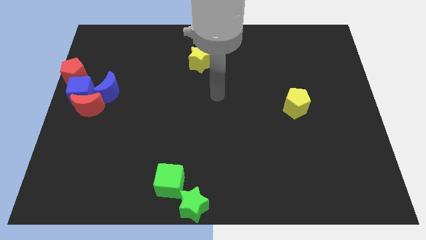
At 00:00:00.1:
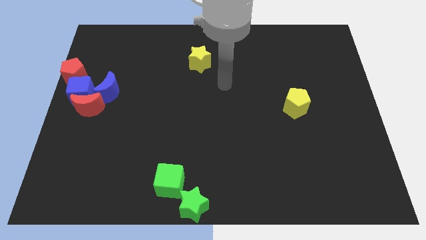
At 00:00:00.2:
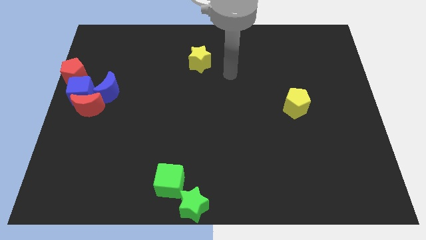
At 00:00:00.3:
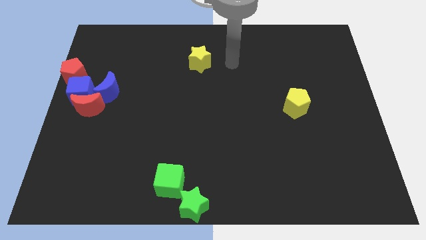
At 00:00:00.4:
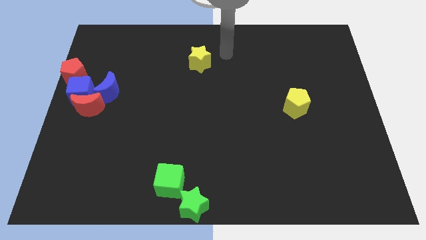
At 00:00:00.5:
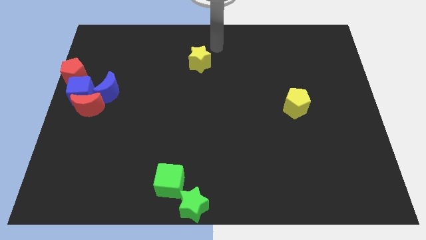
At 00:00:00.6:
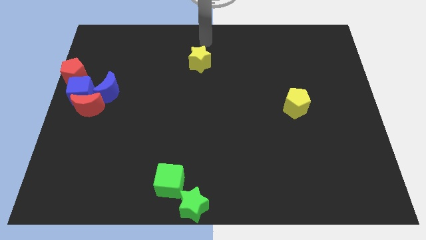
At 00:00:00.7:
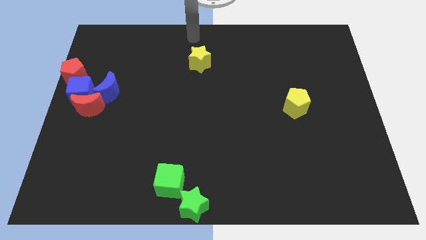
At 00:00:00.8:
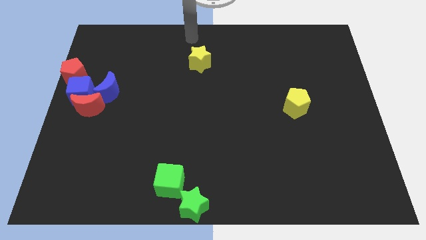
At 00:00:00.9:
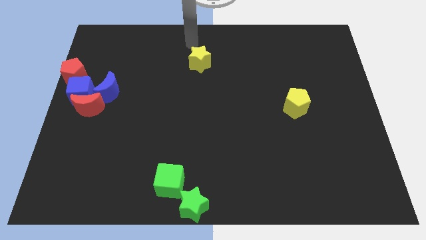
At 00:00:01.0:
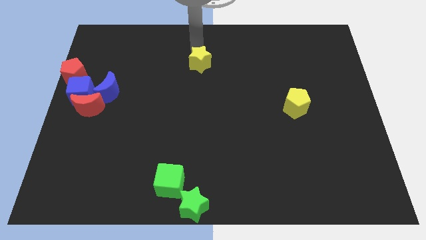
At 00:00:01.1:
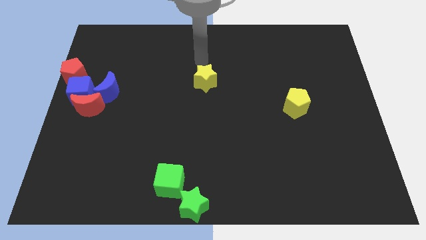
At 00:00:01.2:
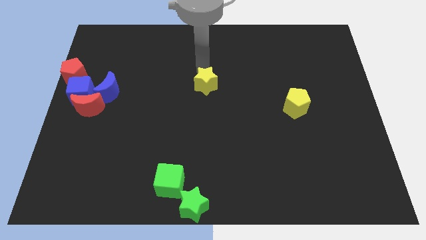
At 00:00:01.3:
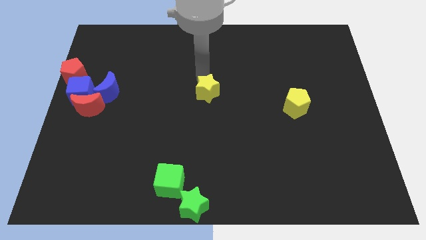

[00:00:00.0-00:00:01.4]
push the yellow pentagon to the center of the board

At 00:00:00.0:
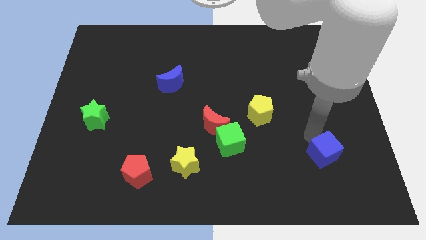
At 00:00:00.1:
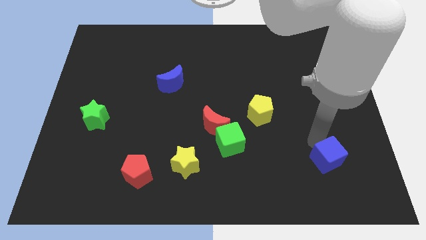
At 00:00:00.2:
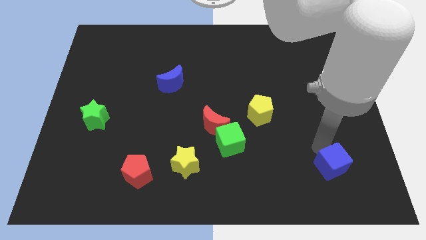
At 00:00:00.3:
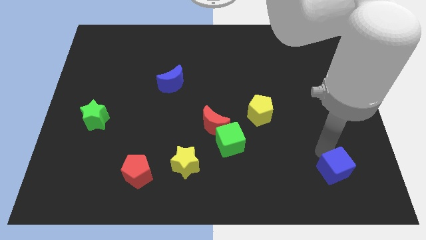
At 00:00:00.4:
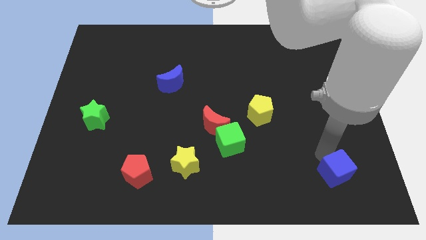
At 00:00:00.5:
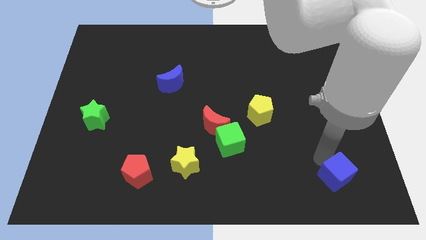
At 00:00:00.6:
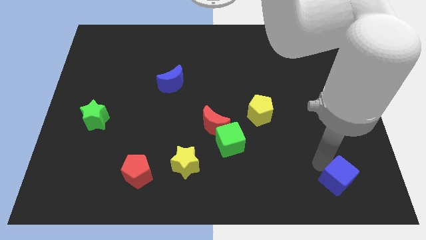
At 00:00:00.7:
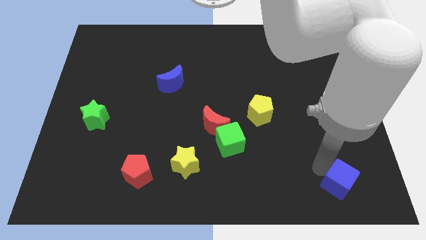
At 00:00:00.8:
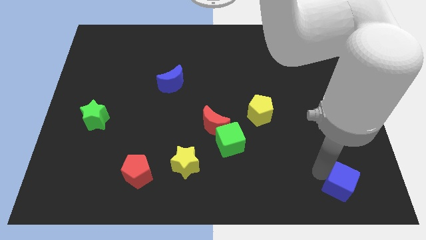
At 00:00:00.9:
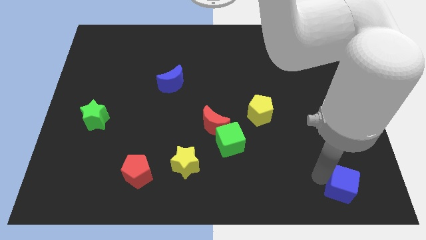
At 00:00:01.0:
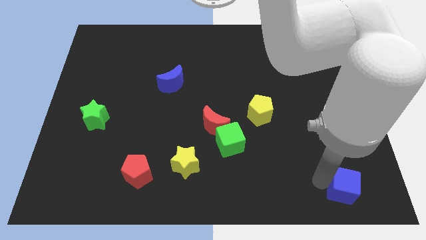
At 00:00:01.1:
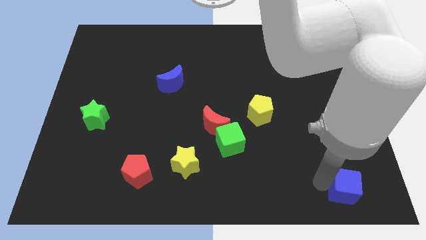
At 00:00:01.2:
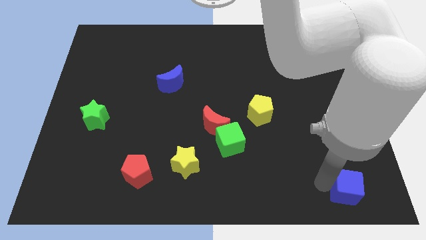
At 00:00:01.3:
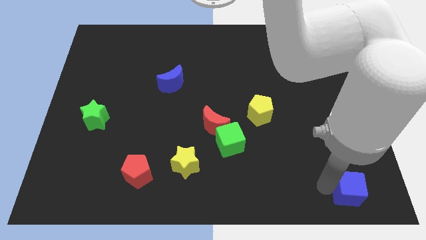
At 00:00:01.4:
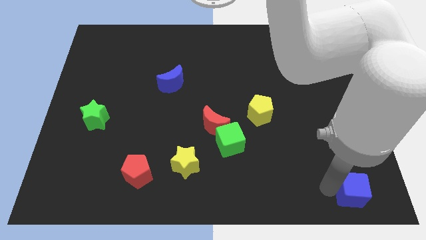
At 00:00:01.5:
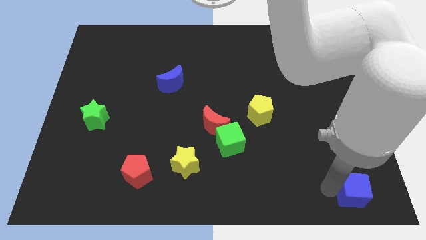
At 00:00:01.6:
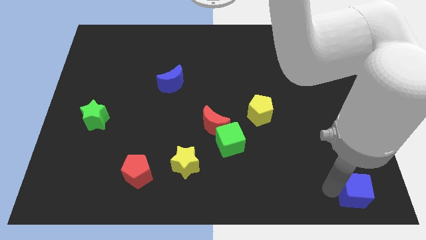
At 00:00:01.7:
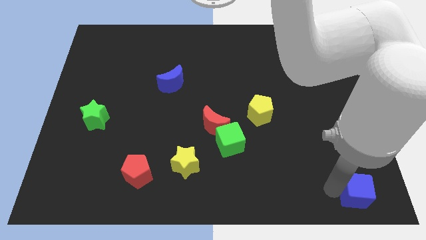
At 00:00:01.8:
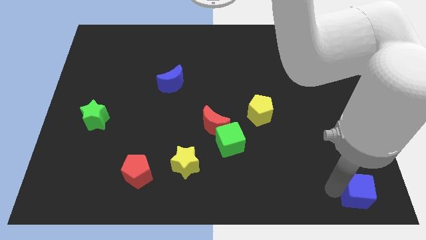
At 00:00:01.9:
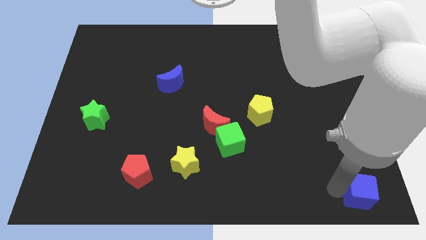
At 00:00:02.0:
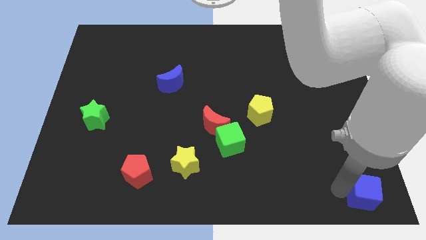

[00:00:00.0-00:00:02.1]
move the blue cube towards the bottom right

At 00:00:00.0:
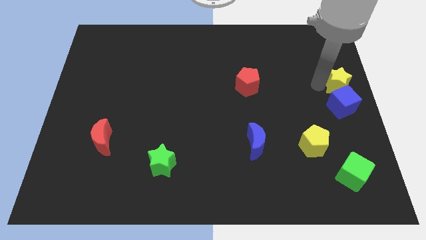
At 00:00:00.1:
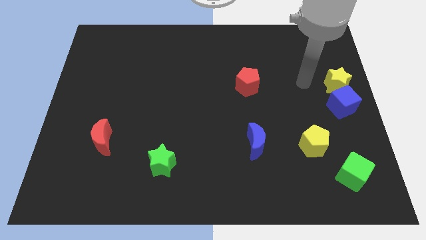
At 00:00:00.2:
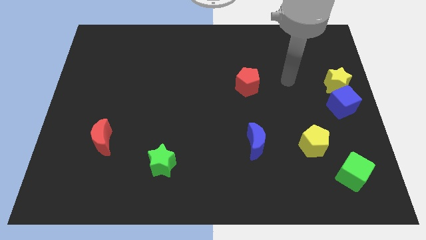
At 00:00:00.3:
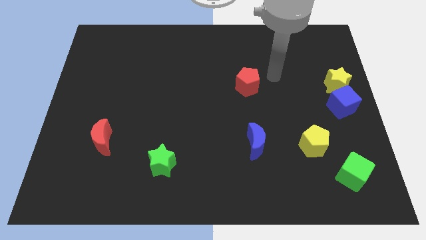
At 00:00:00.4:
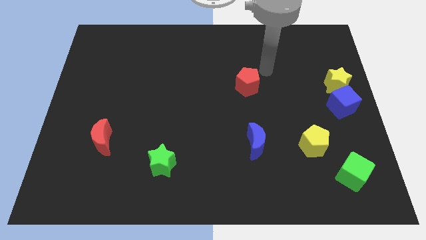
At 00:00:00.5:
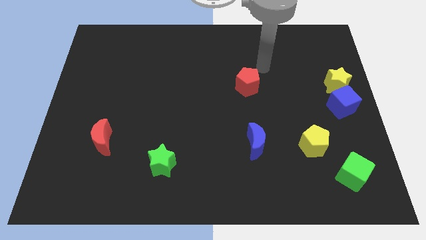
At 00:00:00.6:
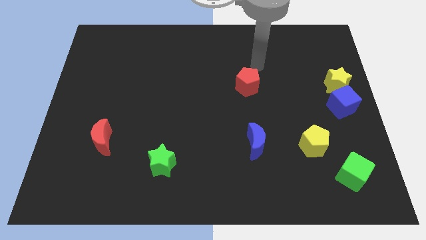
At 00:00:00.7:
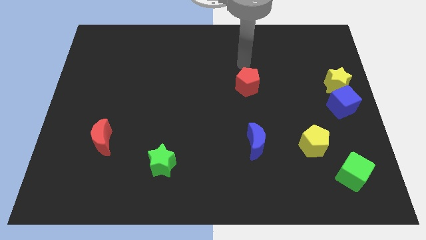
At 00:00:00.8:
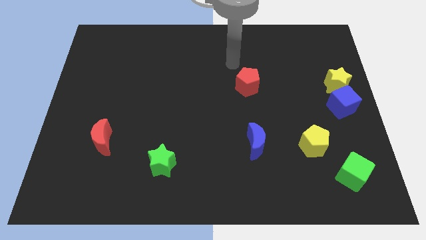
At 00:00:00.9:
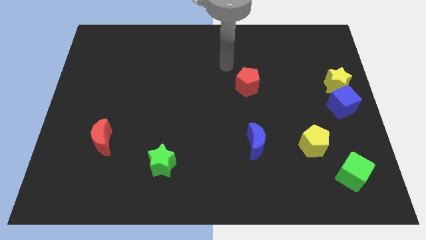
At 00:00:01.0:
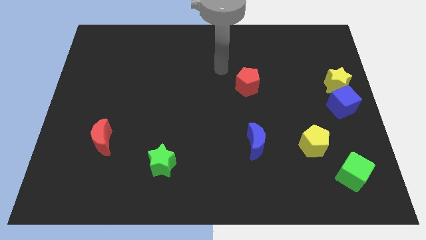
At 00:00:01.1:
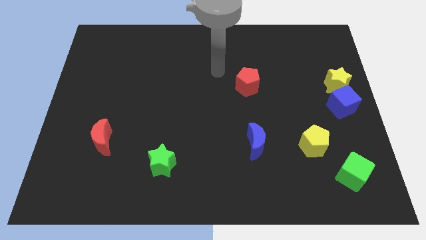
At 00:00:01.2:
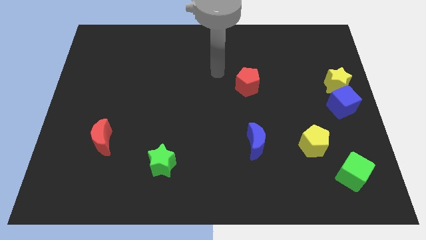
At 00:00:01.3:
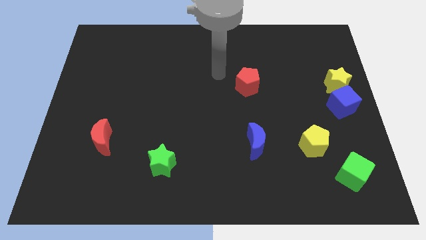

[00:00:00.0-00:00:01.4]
move your arm to the center of the board

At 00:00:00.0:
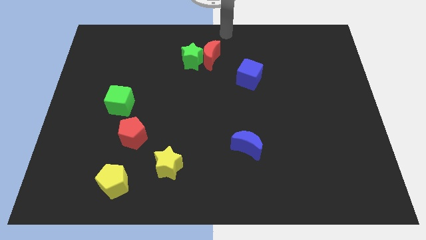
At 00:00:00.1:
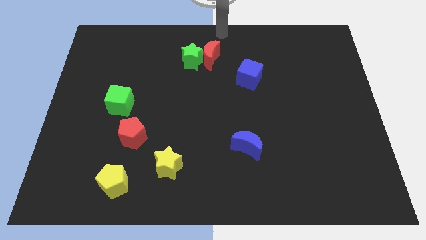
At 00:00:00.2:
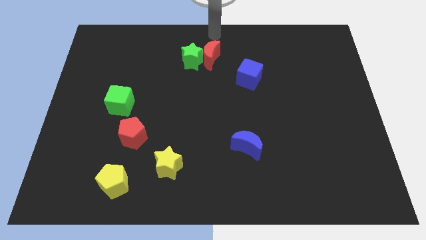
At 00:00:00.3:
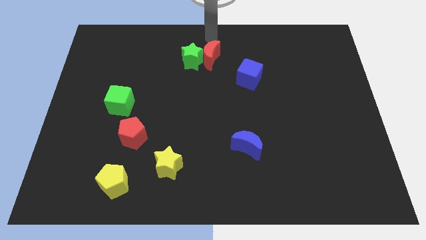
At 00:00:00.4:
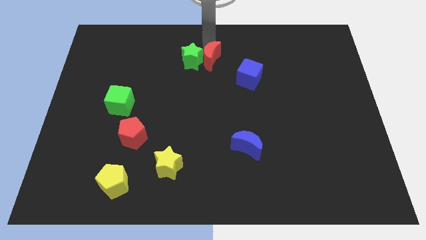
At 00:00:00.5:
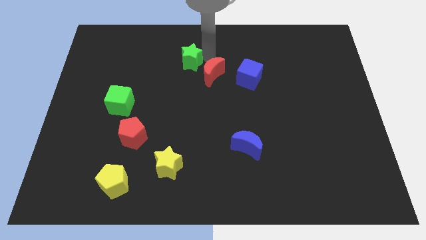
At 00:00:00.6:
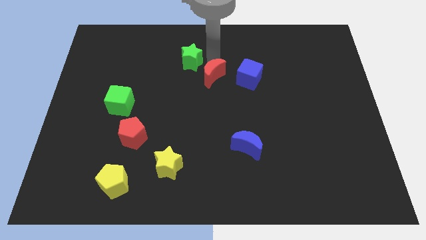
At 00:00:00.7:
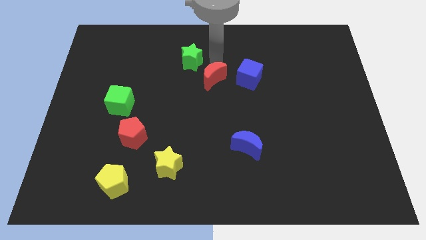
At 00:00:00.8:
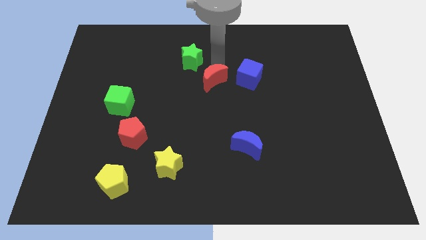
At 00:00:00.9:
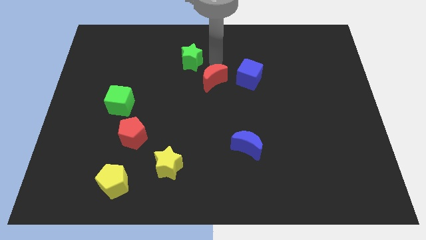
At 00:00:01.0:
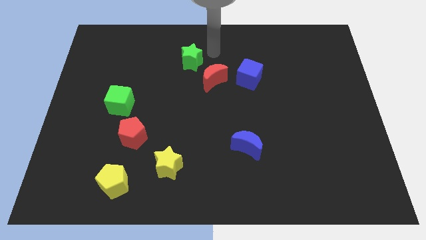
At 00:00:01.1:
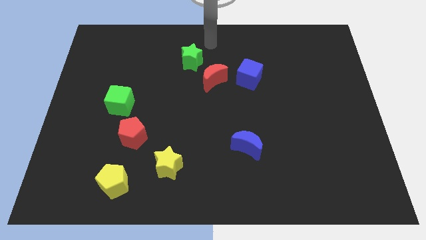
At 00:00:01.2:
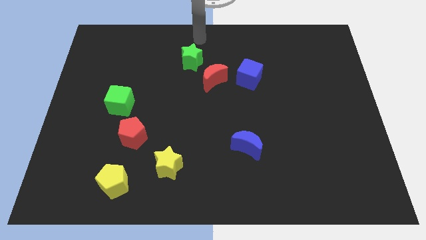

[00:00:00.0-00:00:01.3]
push the red crescent slightly to the bottom

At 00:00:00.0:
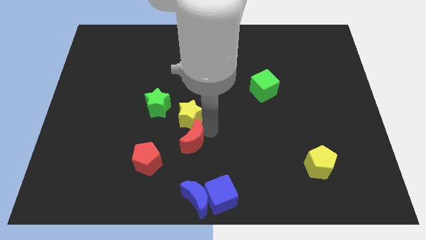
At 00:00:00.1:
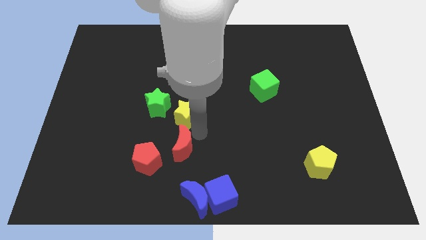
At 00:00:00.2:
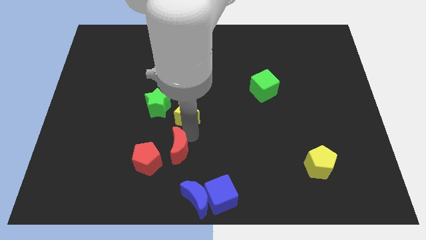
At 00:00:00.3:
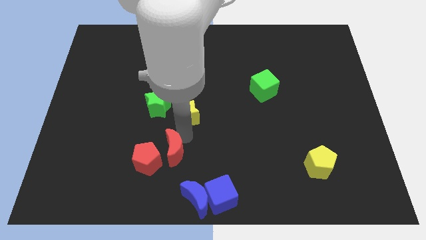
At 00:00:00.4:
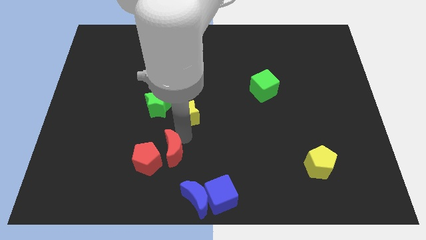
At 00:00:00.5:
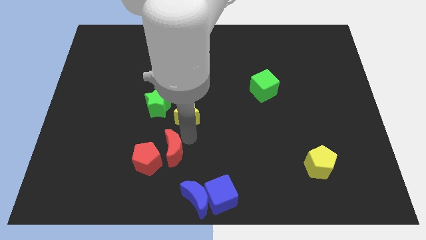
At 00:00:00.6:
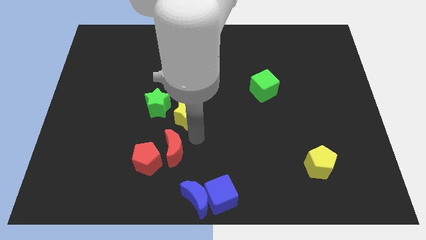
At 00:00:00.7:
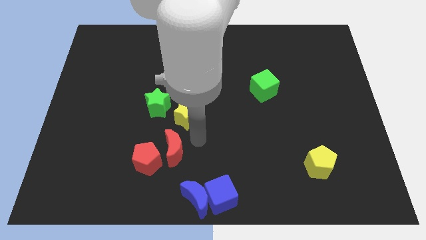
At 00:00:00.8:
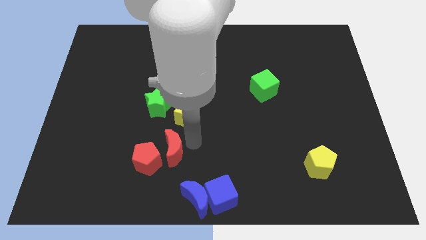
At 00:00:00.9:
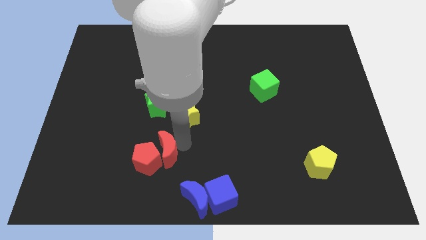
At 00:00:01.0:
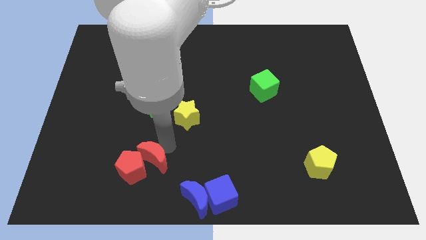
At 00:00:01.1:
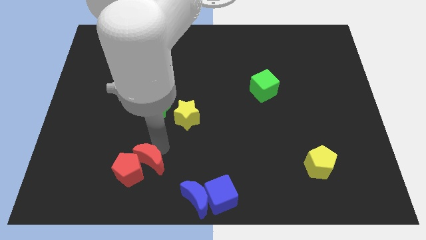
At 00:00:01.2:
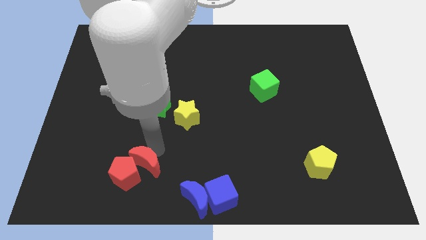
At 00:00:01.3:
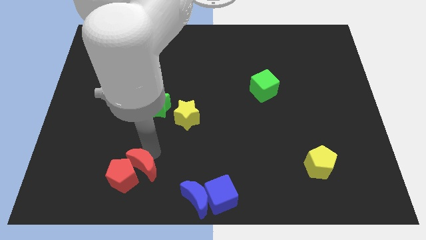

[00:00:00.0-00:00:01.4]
push the red moon into the red pentagon

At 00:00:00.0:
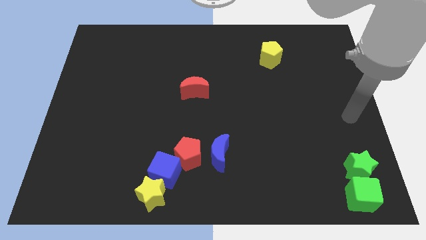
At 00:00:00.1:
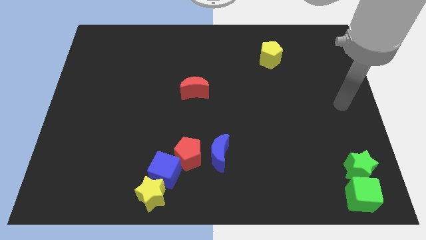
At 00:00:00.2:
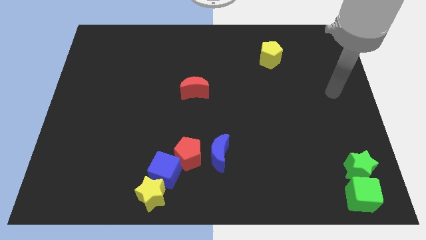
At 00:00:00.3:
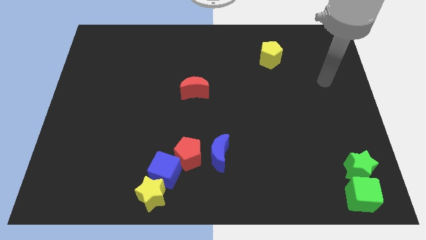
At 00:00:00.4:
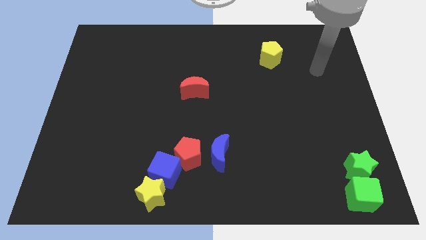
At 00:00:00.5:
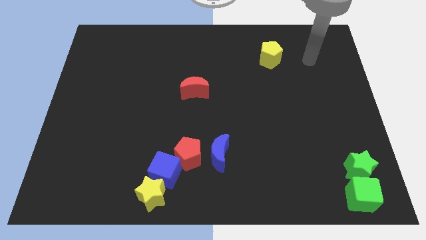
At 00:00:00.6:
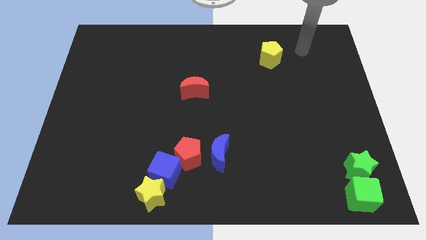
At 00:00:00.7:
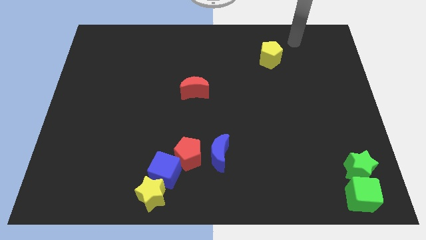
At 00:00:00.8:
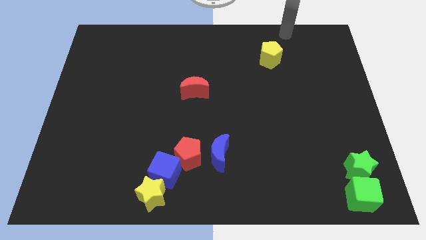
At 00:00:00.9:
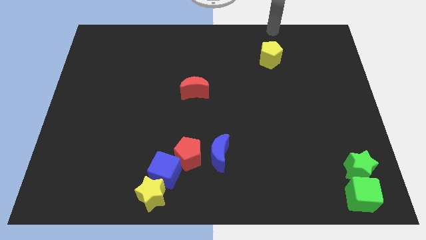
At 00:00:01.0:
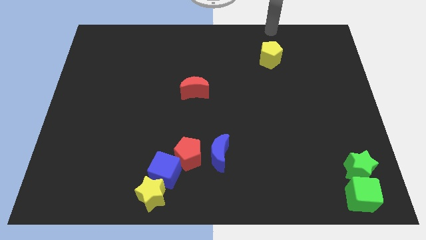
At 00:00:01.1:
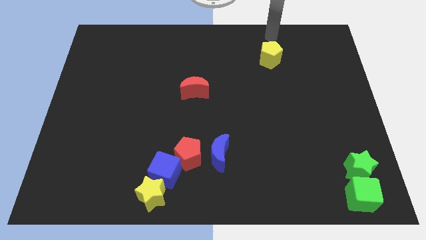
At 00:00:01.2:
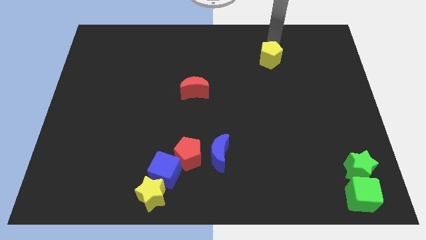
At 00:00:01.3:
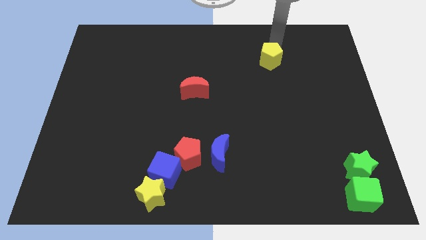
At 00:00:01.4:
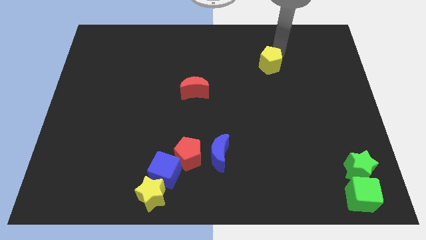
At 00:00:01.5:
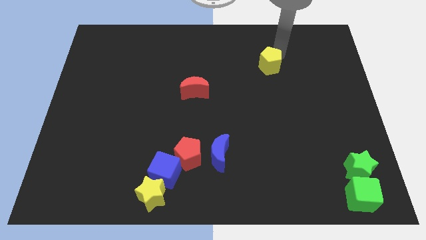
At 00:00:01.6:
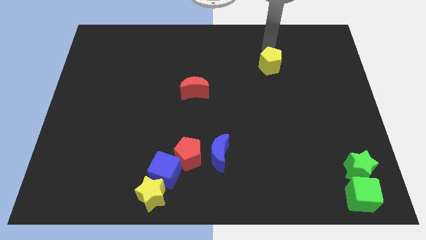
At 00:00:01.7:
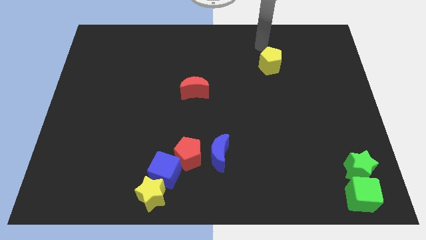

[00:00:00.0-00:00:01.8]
move your arm to the top of the yellow pentagon
